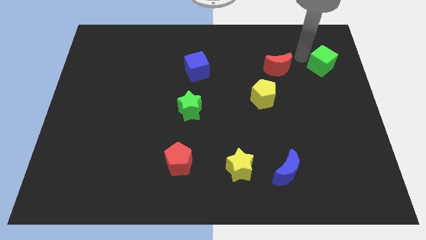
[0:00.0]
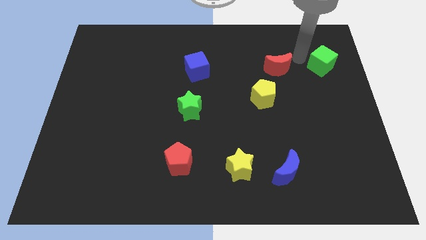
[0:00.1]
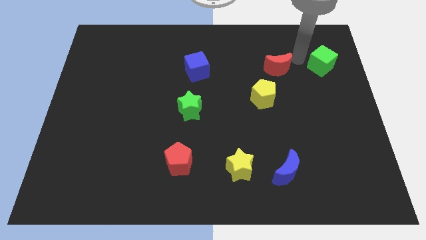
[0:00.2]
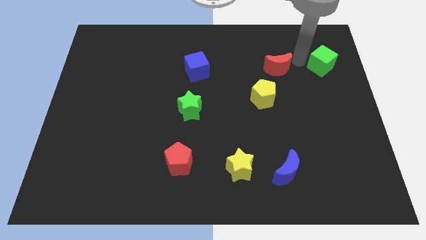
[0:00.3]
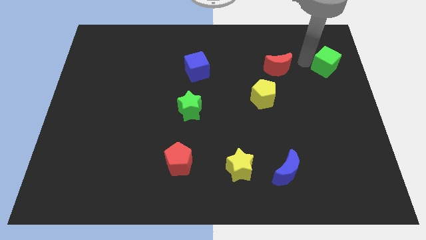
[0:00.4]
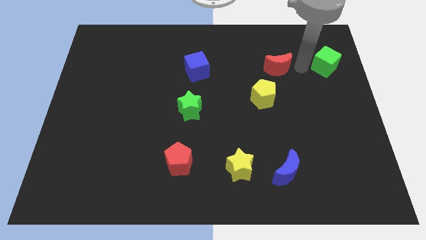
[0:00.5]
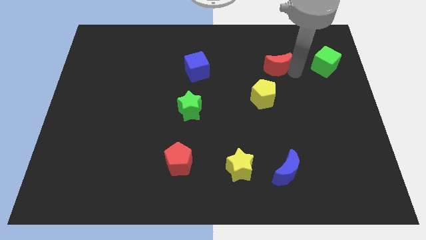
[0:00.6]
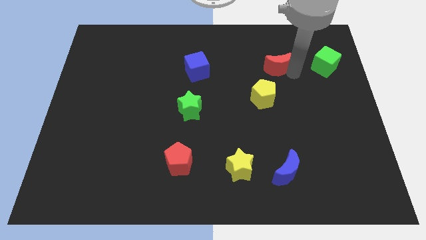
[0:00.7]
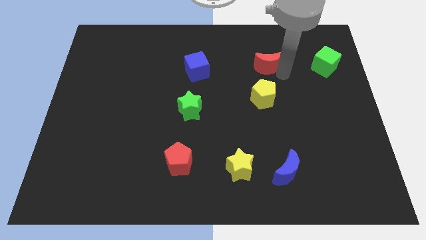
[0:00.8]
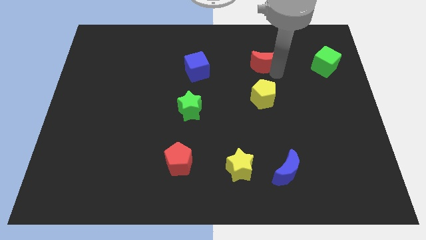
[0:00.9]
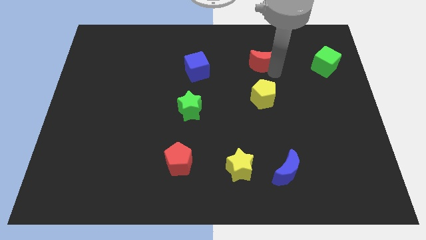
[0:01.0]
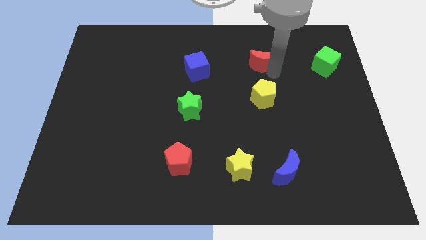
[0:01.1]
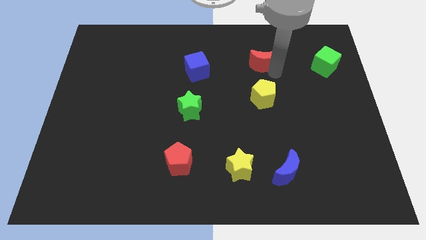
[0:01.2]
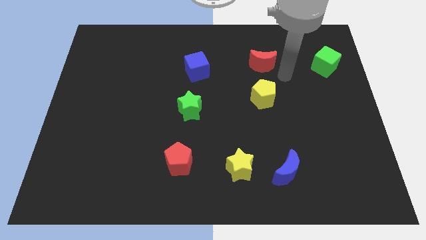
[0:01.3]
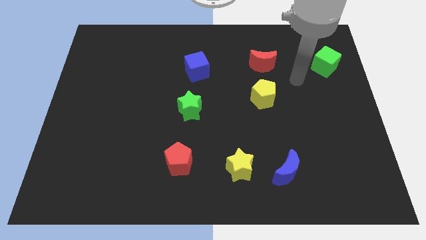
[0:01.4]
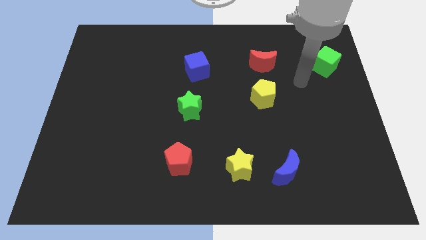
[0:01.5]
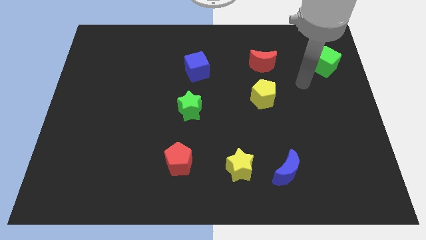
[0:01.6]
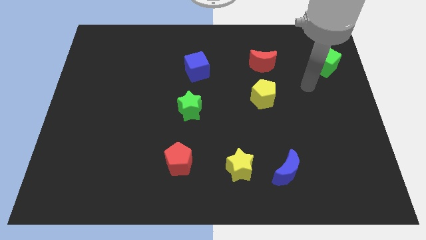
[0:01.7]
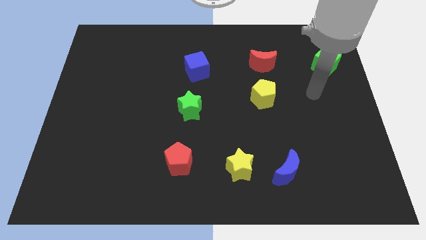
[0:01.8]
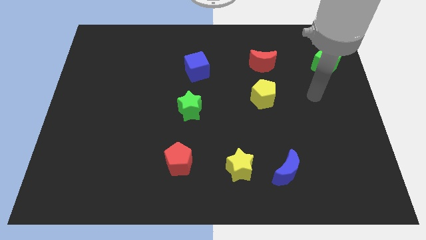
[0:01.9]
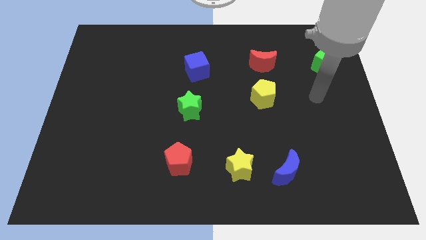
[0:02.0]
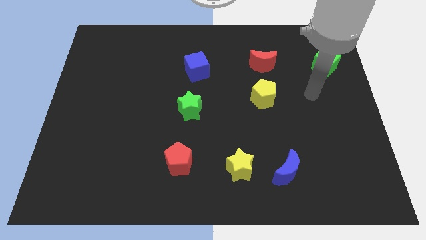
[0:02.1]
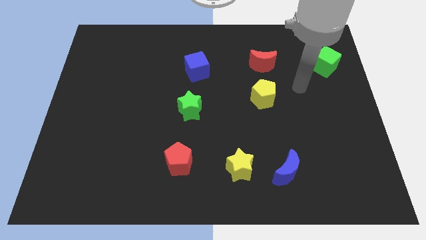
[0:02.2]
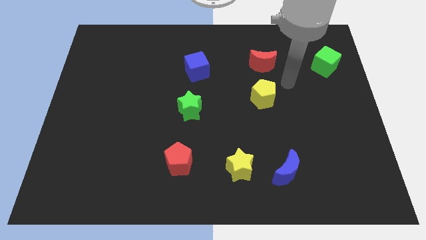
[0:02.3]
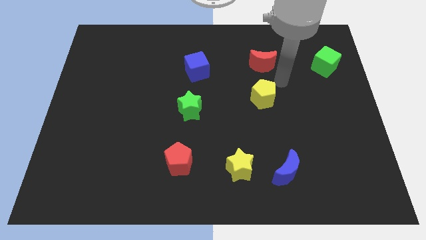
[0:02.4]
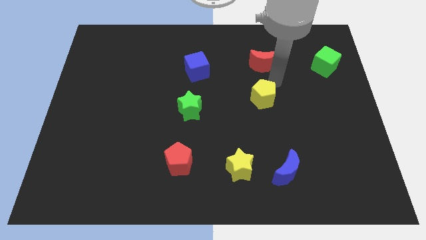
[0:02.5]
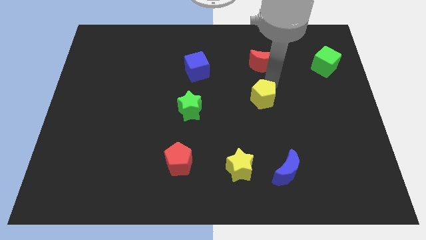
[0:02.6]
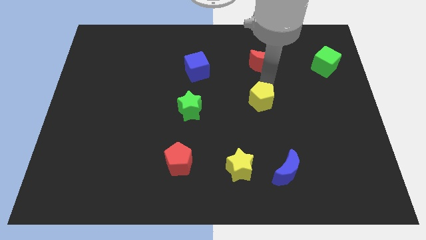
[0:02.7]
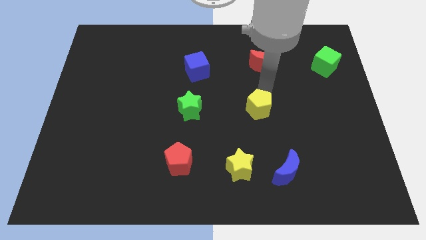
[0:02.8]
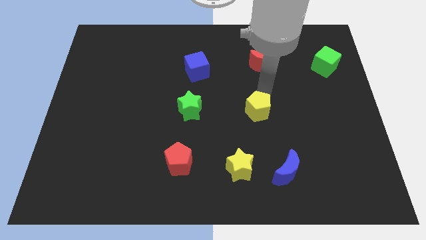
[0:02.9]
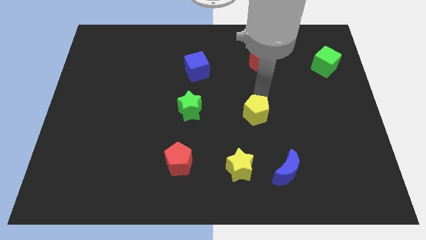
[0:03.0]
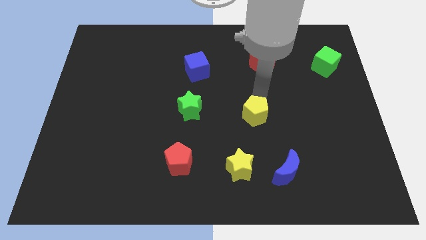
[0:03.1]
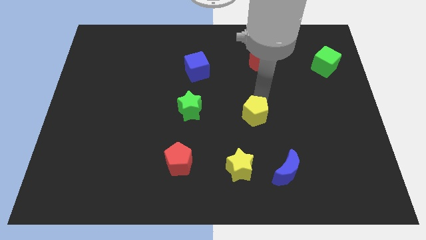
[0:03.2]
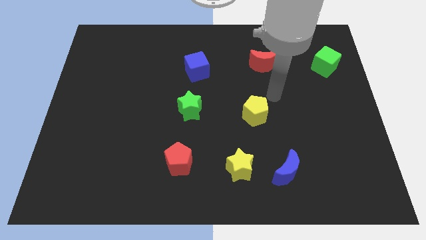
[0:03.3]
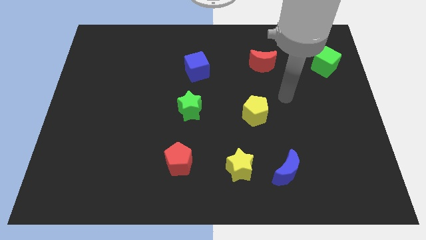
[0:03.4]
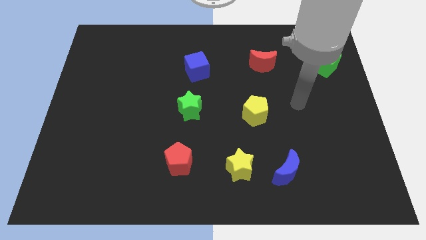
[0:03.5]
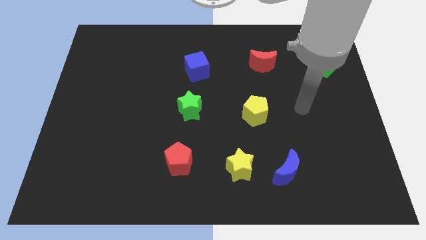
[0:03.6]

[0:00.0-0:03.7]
move the yellow pentagon above the yellow star

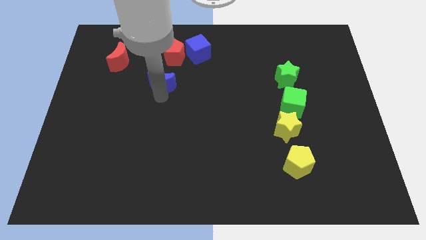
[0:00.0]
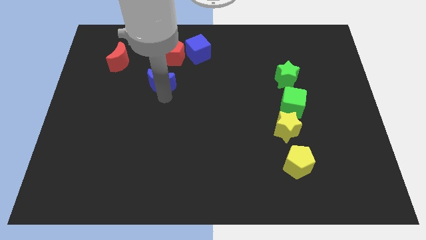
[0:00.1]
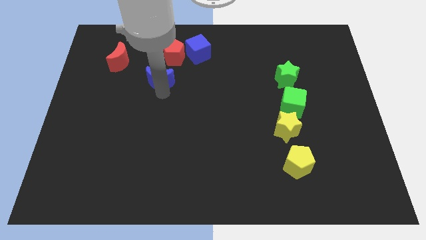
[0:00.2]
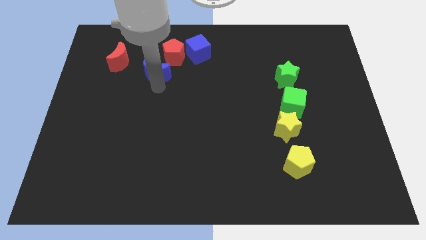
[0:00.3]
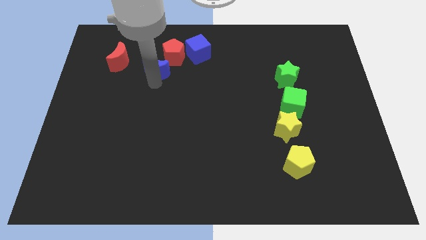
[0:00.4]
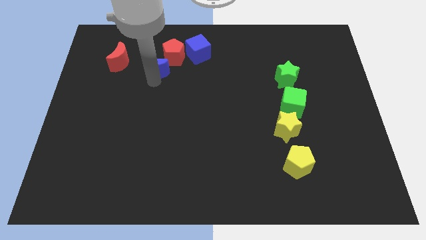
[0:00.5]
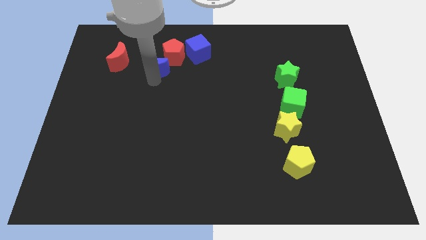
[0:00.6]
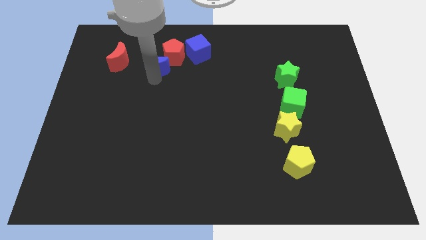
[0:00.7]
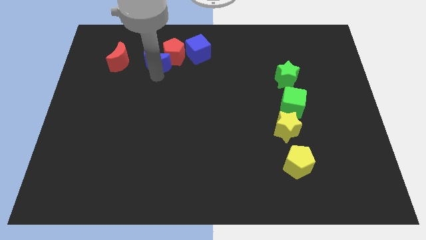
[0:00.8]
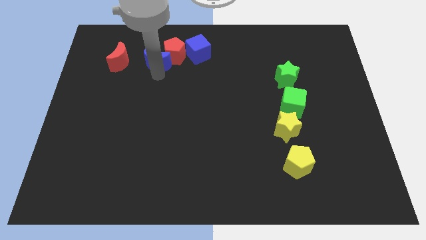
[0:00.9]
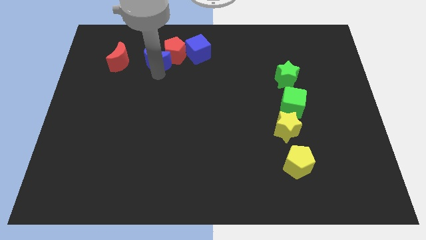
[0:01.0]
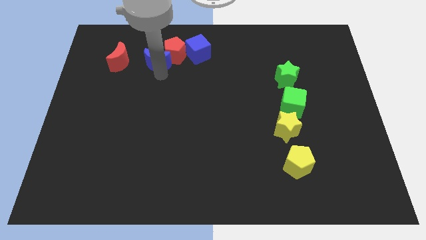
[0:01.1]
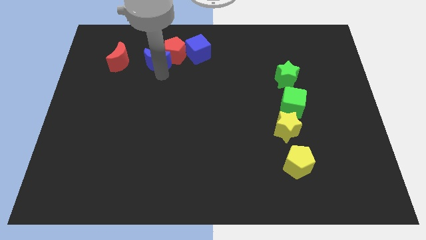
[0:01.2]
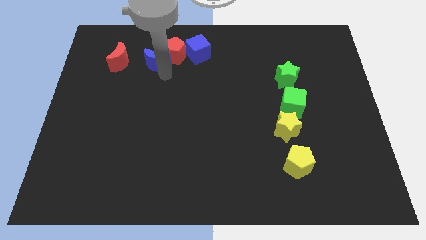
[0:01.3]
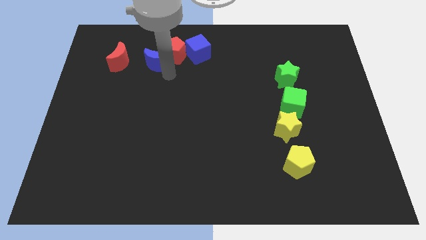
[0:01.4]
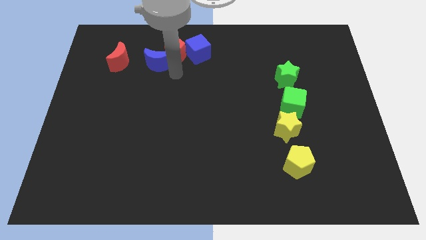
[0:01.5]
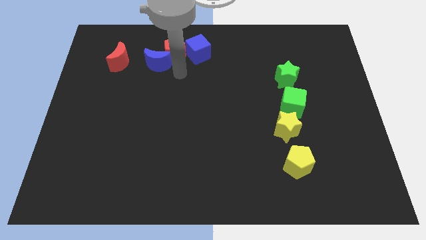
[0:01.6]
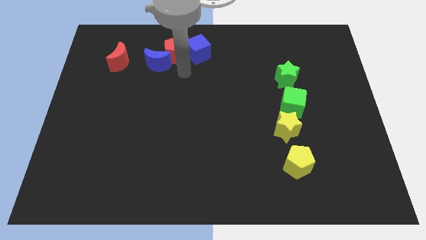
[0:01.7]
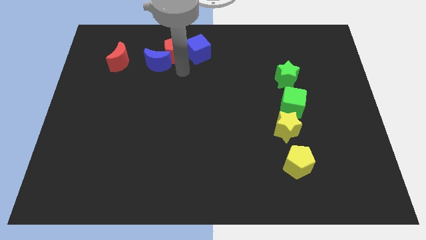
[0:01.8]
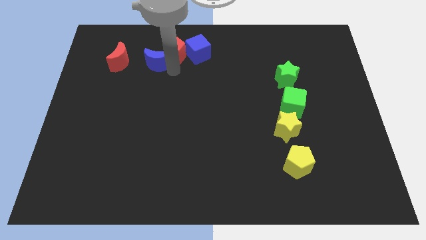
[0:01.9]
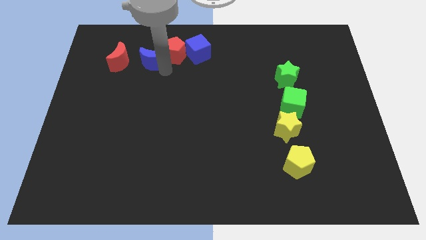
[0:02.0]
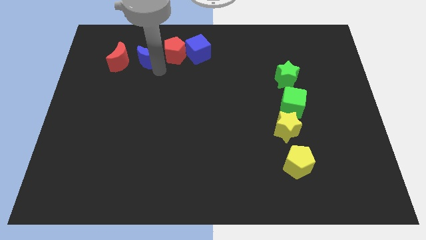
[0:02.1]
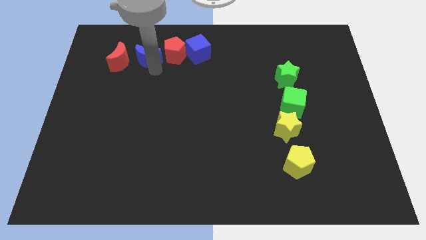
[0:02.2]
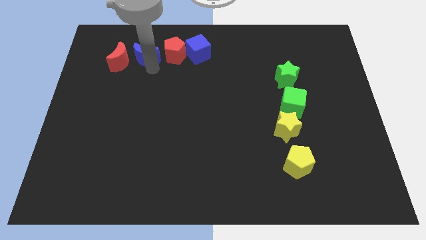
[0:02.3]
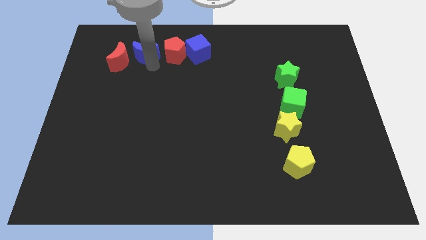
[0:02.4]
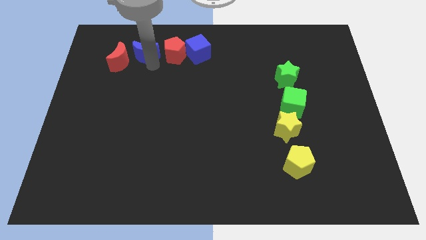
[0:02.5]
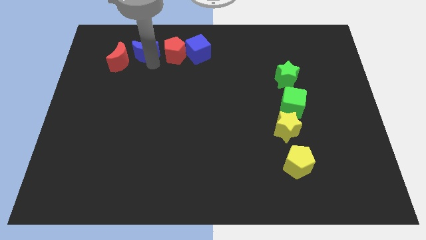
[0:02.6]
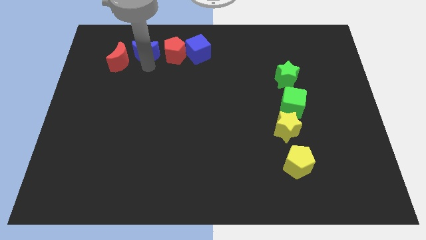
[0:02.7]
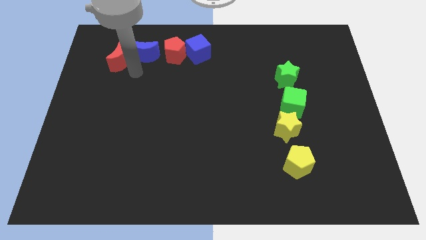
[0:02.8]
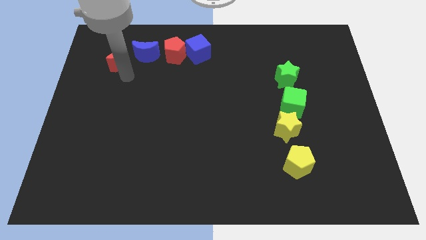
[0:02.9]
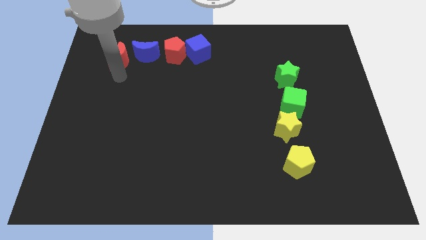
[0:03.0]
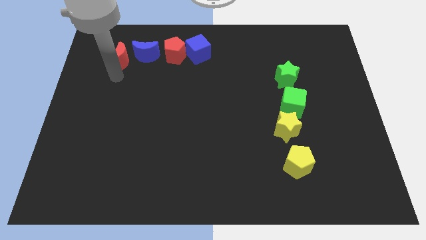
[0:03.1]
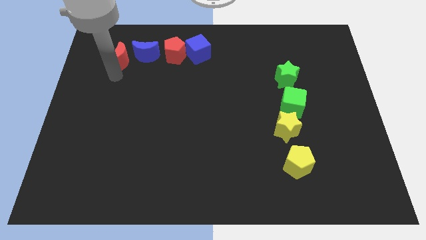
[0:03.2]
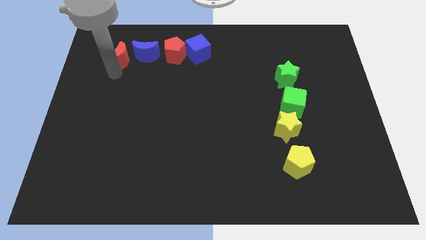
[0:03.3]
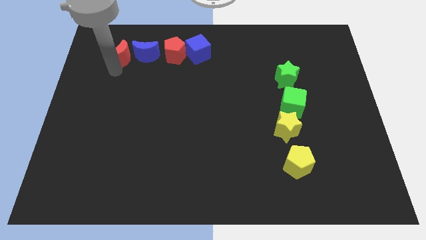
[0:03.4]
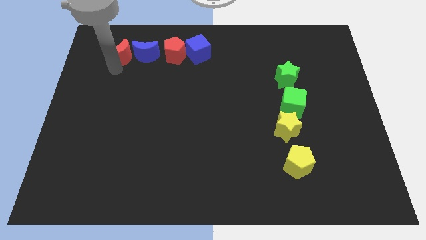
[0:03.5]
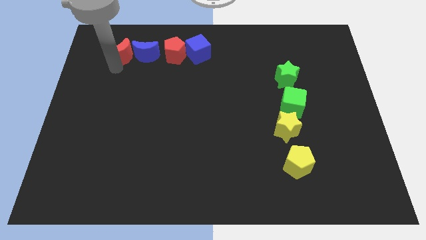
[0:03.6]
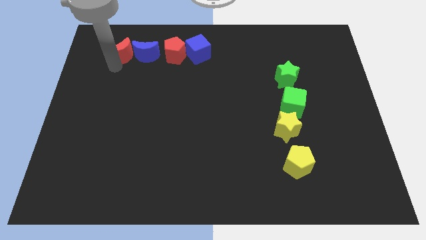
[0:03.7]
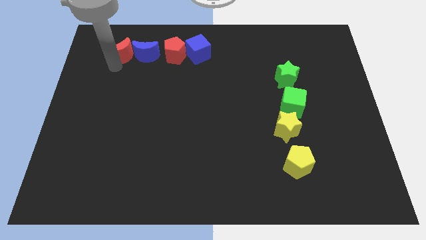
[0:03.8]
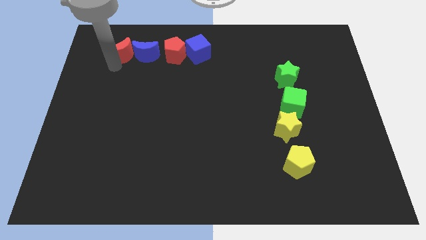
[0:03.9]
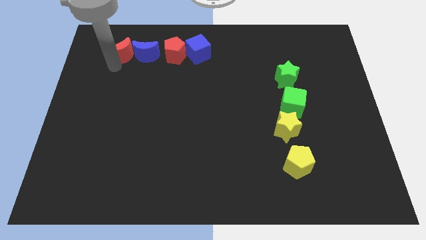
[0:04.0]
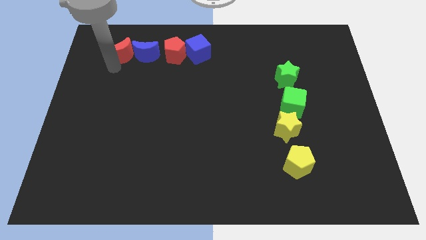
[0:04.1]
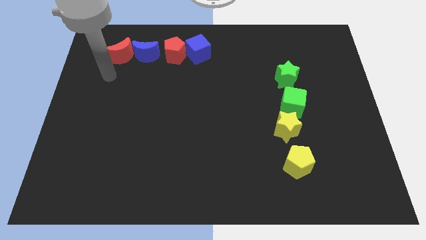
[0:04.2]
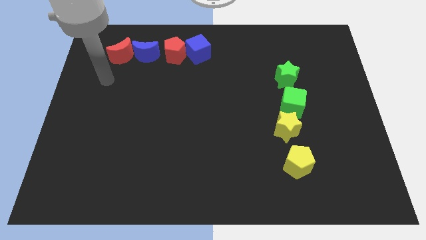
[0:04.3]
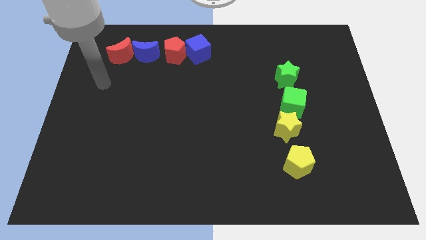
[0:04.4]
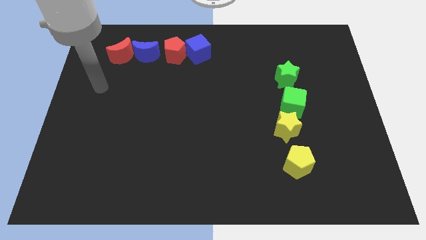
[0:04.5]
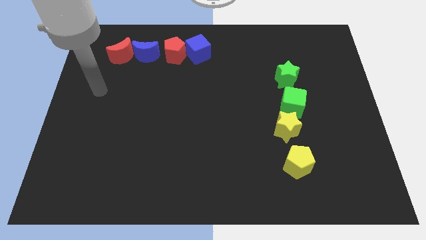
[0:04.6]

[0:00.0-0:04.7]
put the red moon to the left of the blue crescent

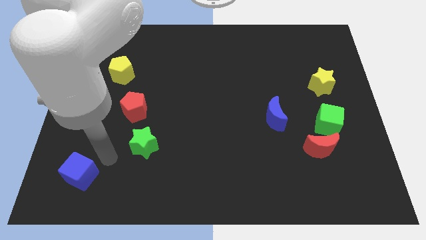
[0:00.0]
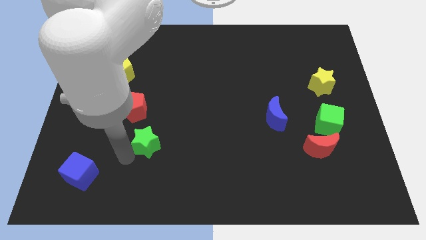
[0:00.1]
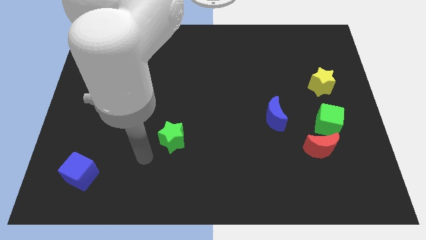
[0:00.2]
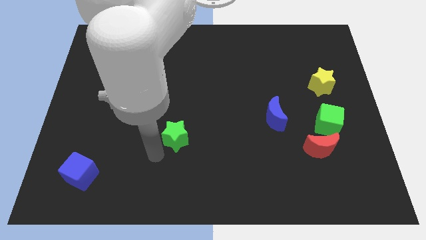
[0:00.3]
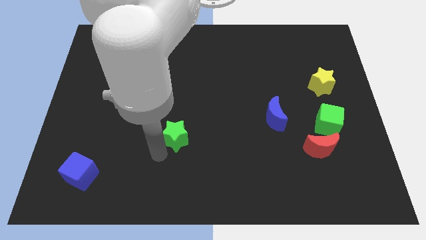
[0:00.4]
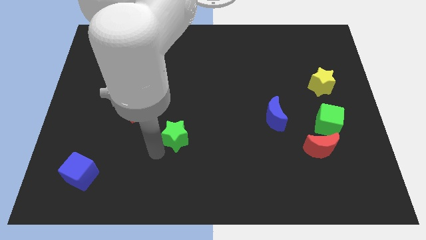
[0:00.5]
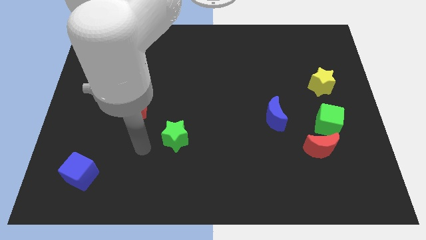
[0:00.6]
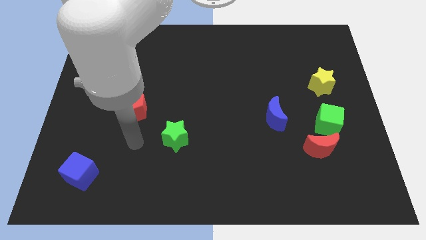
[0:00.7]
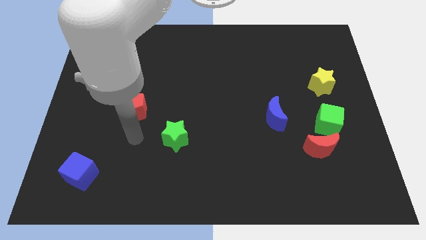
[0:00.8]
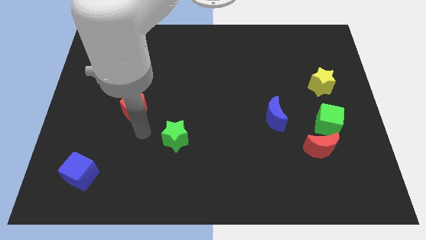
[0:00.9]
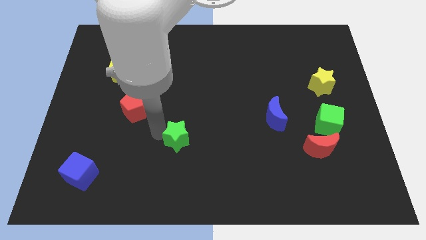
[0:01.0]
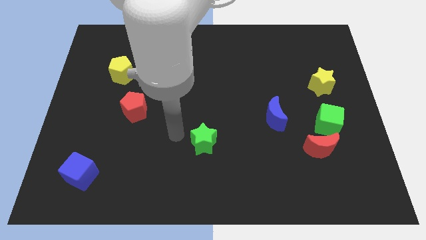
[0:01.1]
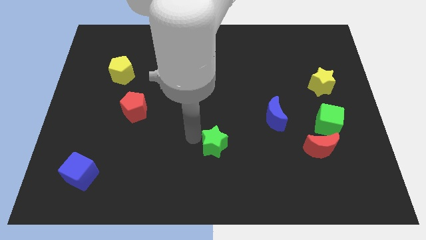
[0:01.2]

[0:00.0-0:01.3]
push the green star to the left of the red crescent
